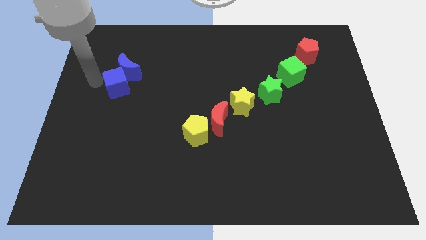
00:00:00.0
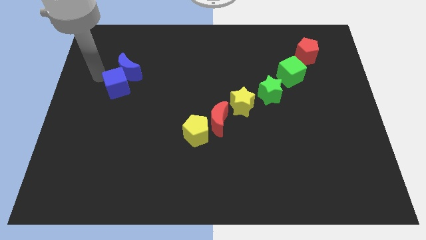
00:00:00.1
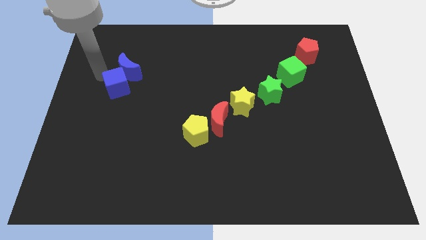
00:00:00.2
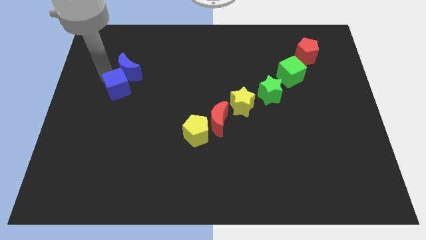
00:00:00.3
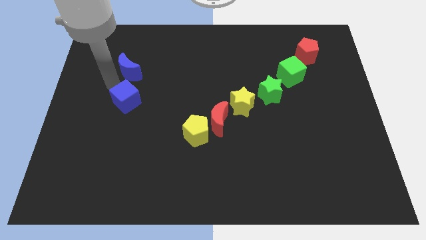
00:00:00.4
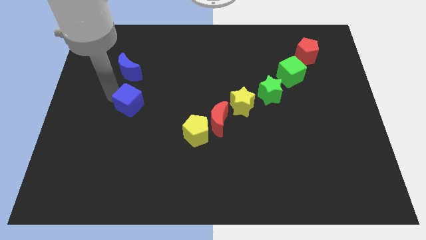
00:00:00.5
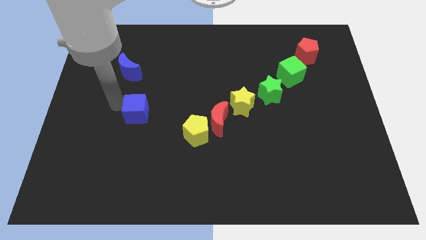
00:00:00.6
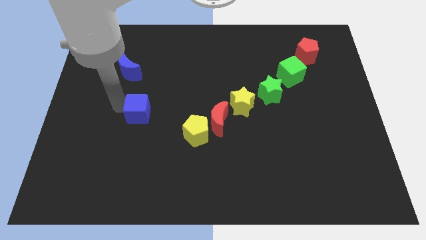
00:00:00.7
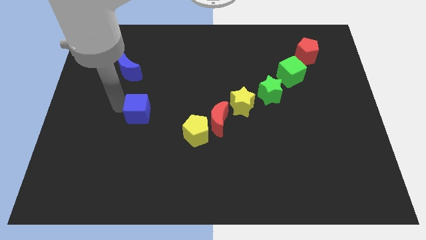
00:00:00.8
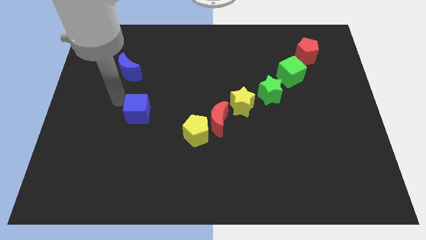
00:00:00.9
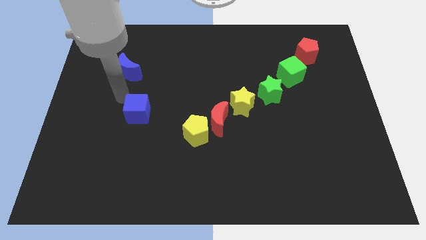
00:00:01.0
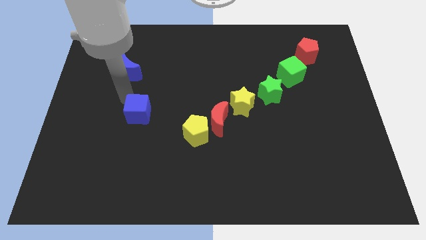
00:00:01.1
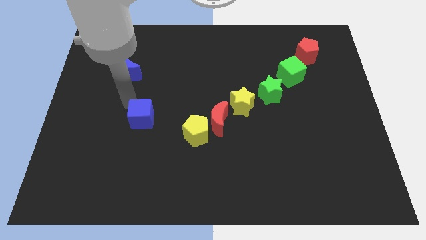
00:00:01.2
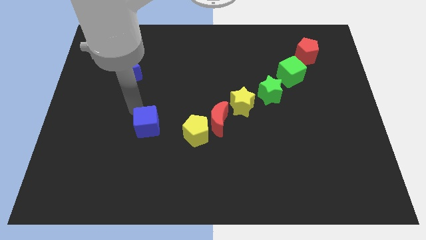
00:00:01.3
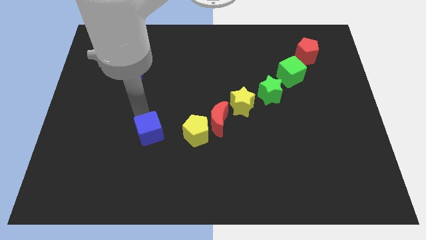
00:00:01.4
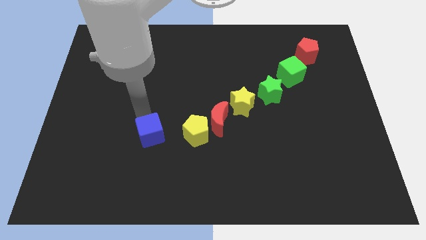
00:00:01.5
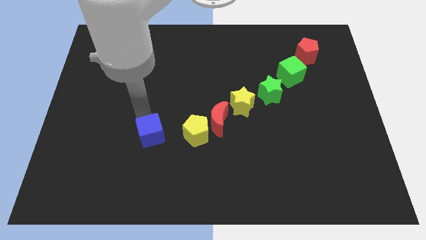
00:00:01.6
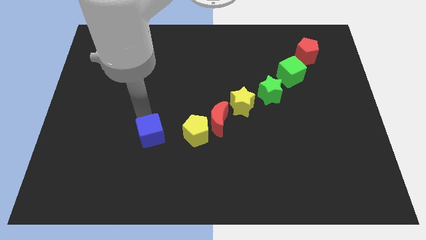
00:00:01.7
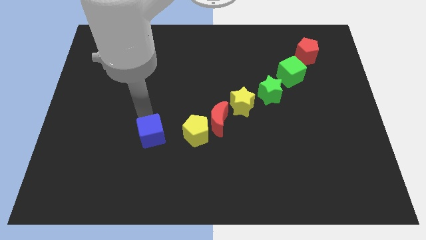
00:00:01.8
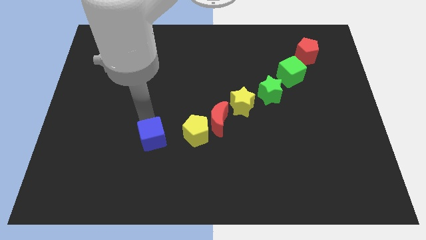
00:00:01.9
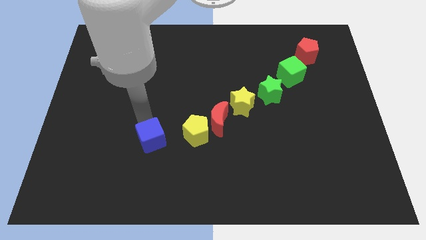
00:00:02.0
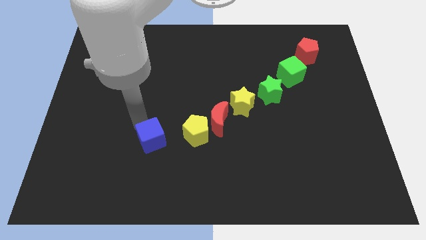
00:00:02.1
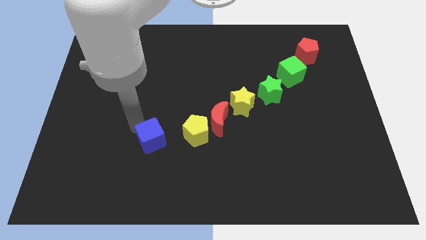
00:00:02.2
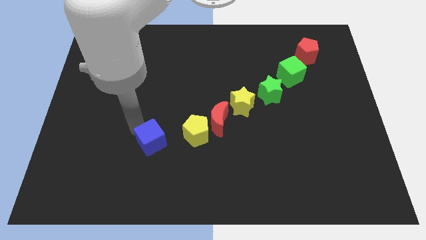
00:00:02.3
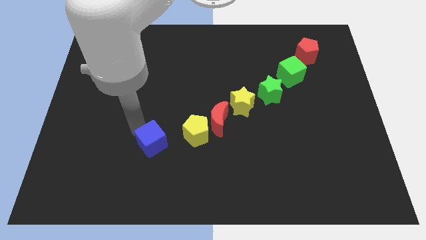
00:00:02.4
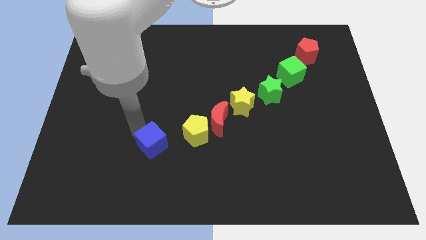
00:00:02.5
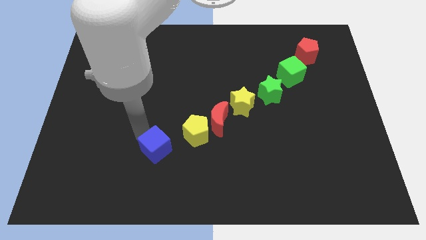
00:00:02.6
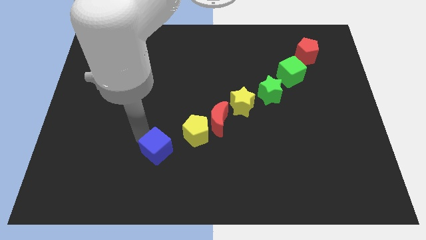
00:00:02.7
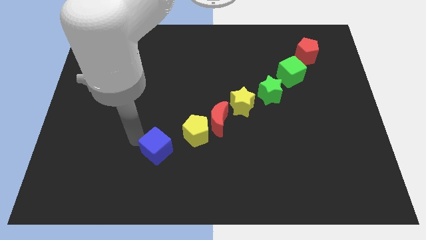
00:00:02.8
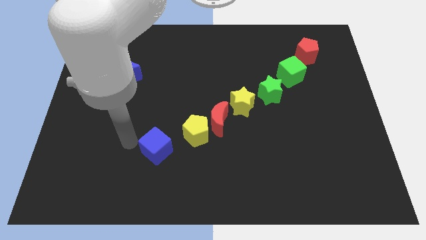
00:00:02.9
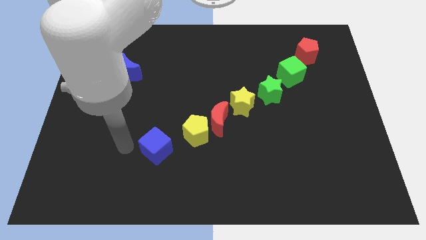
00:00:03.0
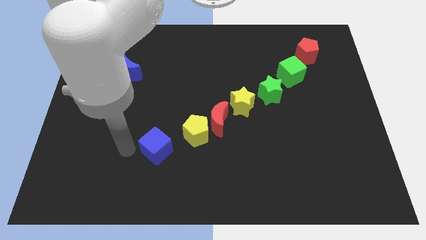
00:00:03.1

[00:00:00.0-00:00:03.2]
push blue cube slightly down

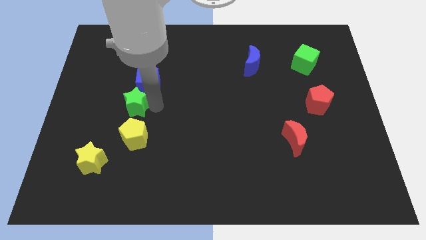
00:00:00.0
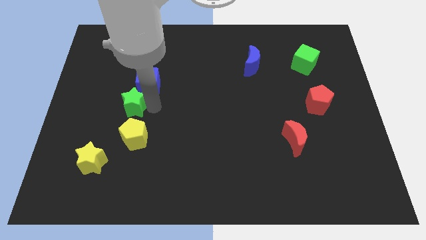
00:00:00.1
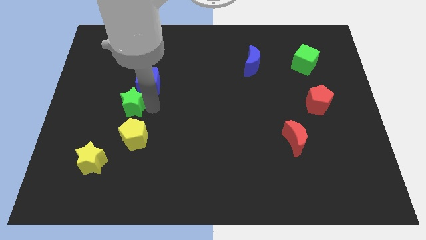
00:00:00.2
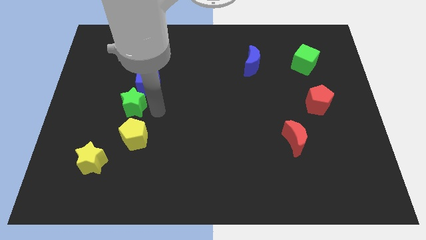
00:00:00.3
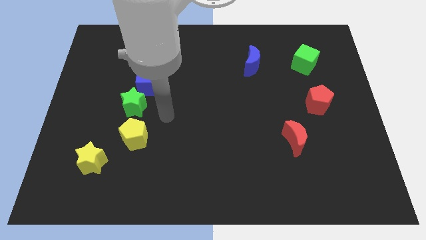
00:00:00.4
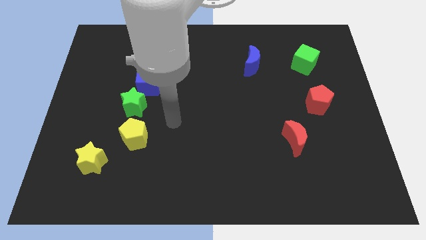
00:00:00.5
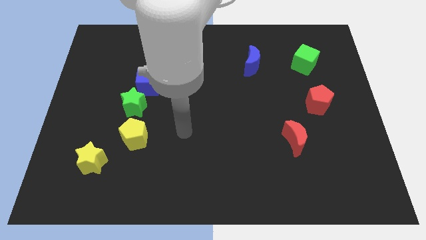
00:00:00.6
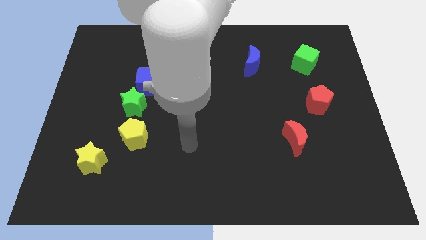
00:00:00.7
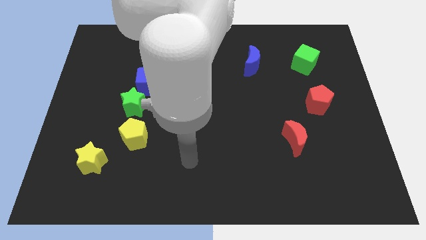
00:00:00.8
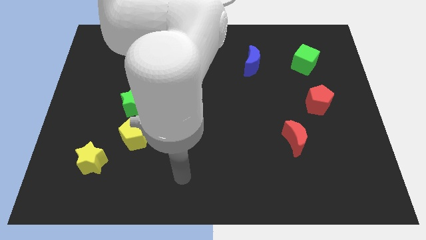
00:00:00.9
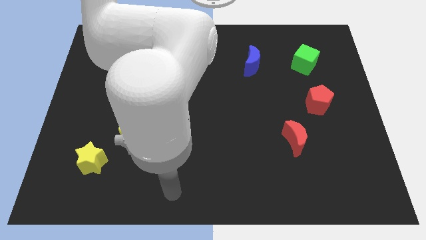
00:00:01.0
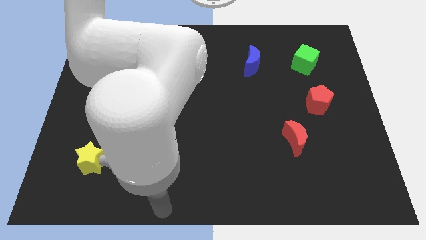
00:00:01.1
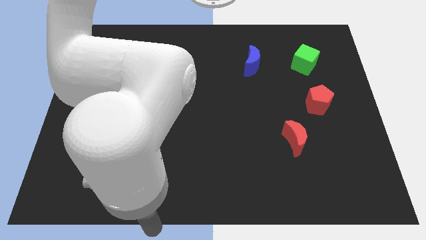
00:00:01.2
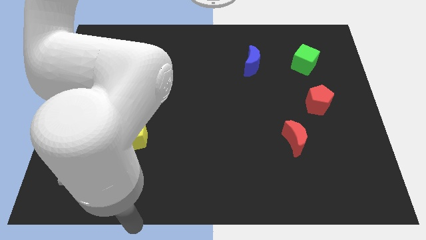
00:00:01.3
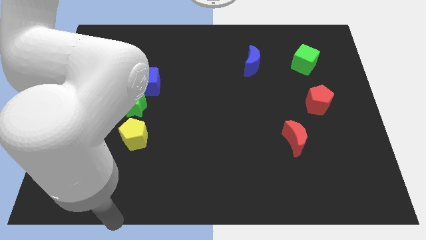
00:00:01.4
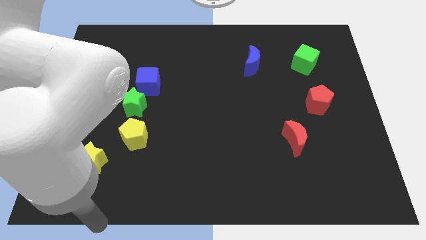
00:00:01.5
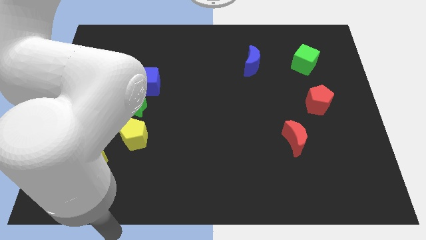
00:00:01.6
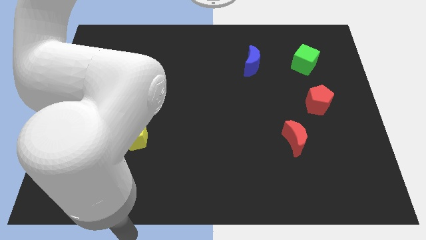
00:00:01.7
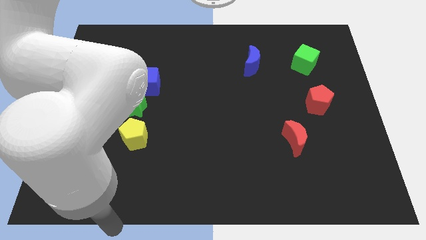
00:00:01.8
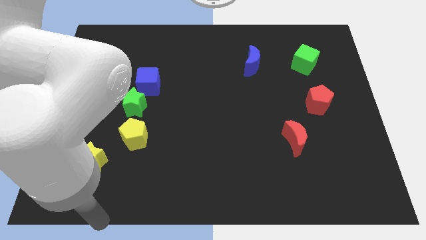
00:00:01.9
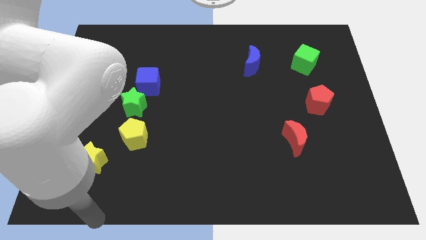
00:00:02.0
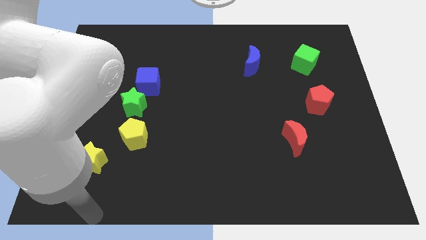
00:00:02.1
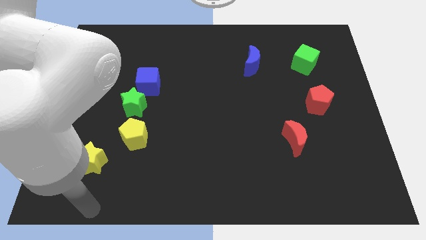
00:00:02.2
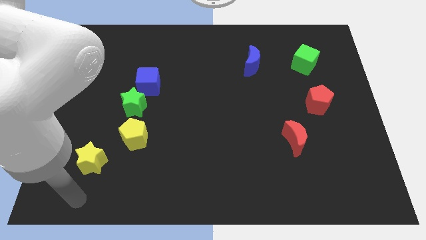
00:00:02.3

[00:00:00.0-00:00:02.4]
point your arm below the yellow star

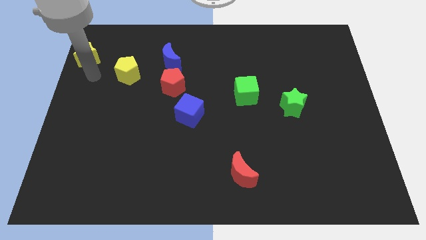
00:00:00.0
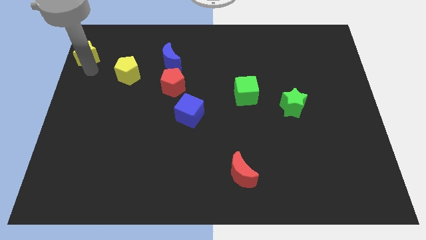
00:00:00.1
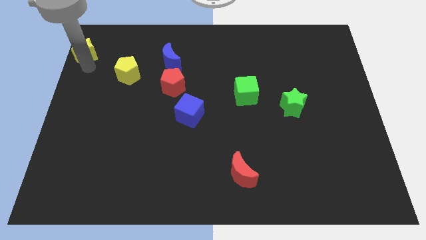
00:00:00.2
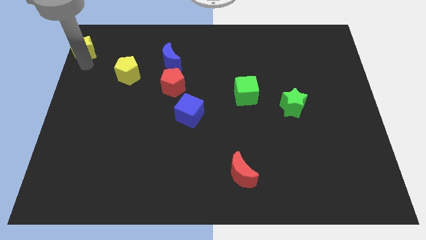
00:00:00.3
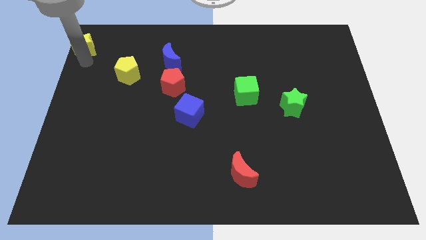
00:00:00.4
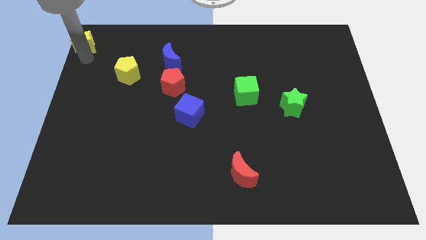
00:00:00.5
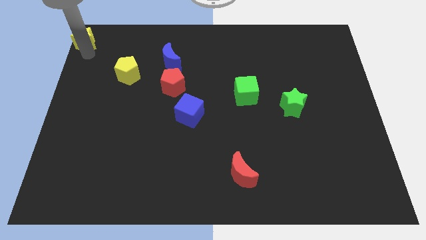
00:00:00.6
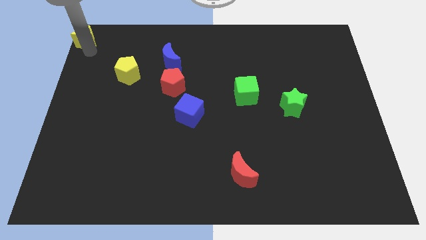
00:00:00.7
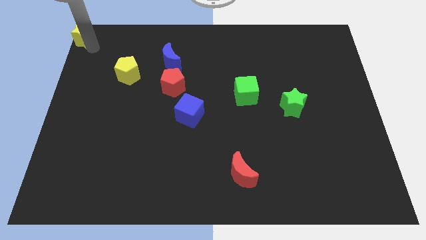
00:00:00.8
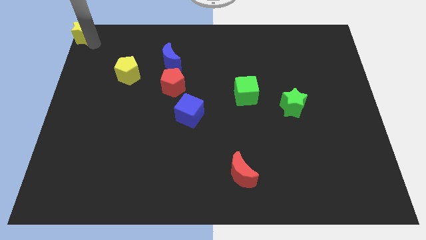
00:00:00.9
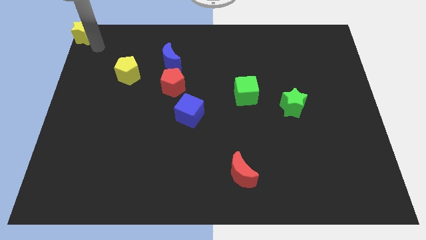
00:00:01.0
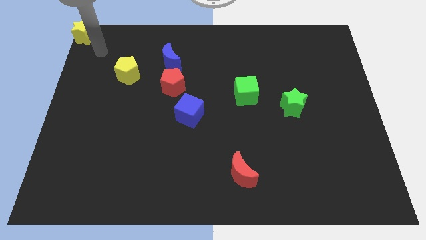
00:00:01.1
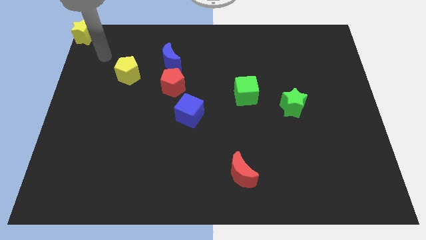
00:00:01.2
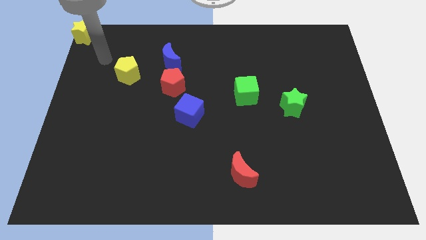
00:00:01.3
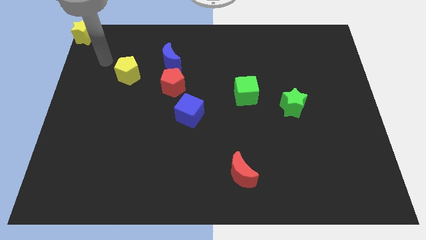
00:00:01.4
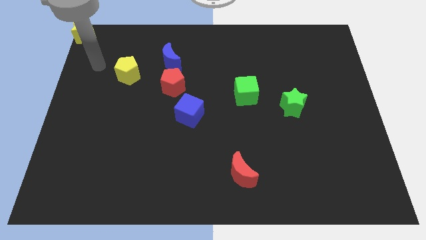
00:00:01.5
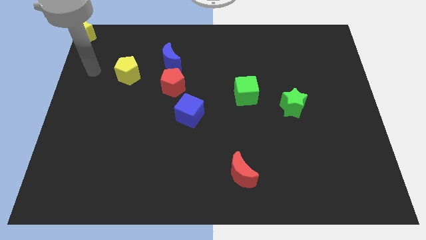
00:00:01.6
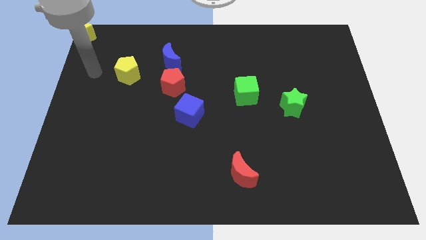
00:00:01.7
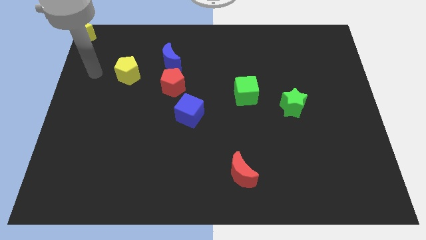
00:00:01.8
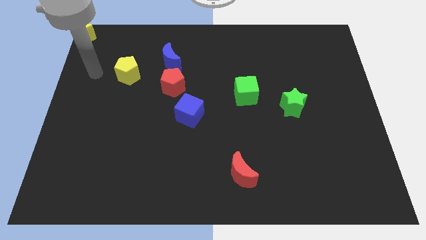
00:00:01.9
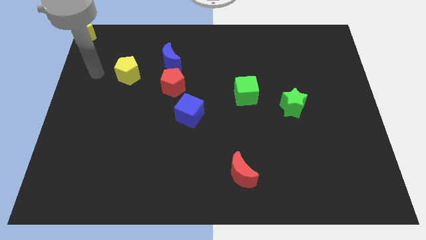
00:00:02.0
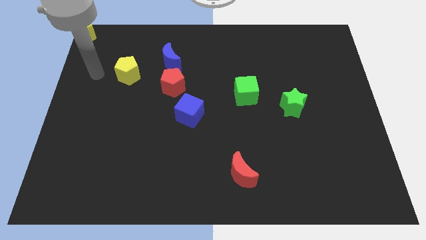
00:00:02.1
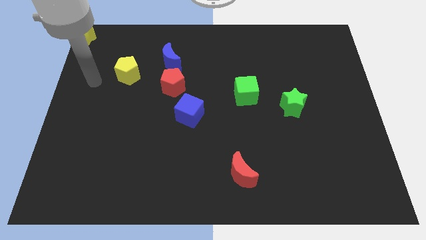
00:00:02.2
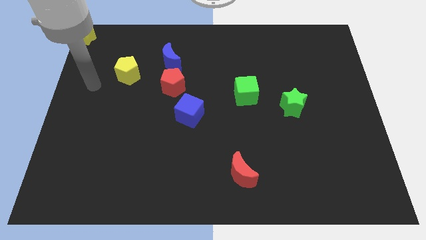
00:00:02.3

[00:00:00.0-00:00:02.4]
slide the yellow star to the top left corner of the board

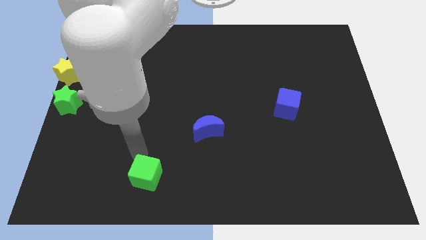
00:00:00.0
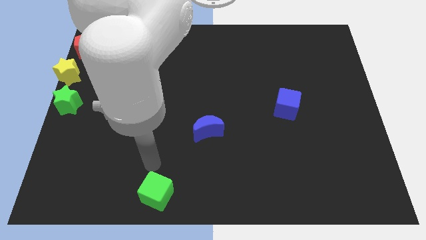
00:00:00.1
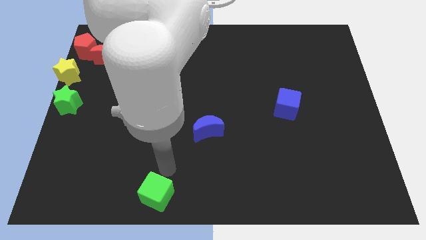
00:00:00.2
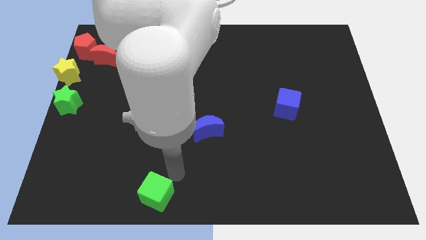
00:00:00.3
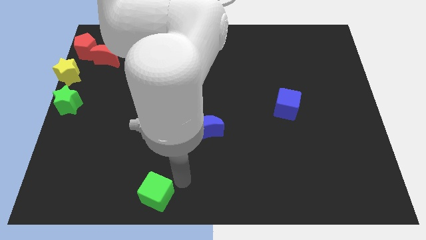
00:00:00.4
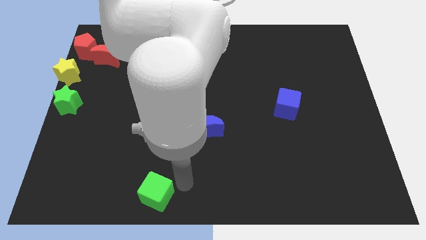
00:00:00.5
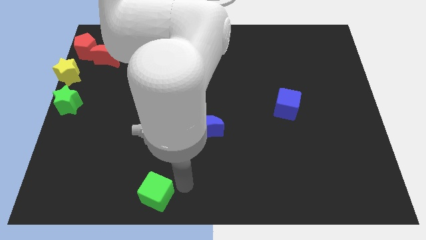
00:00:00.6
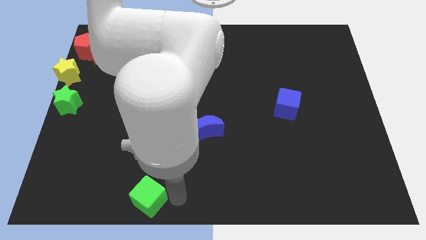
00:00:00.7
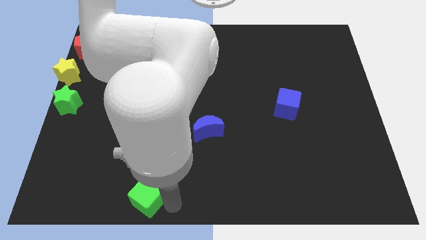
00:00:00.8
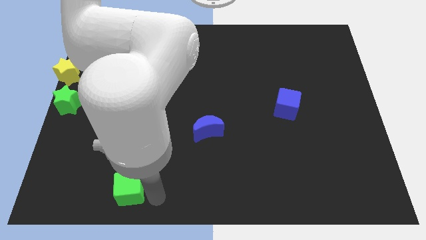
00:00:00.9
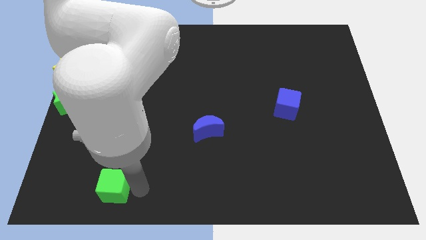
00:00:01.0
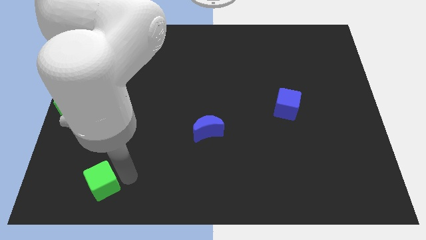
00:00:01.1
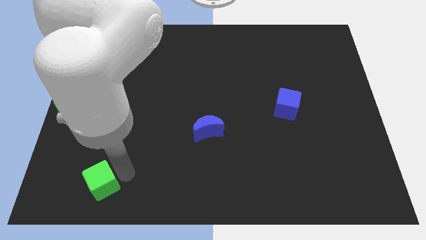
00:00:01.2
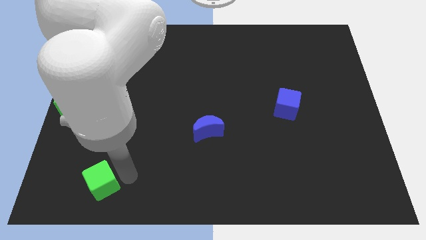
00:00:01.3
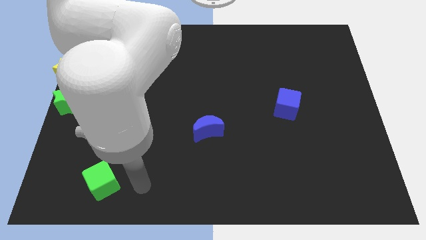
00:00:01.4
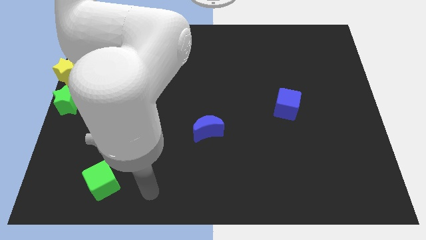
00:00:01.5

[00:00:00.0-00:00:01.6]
push the green cube towards the bottom left side of the board
